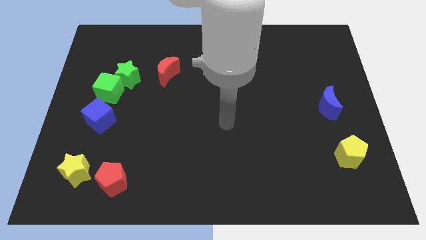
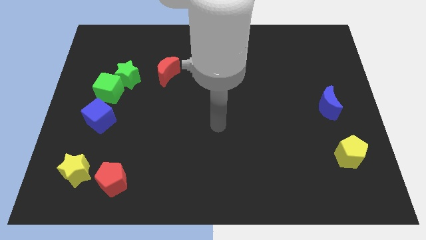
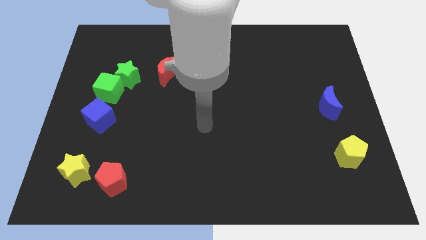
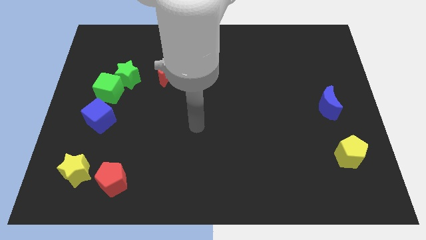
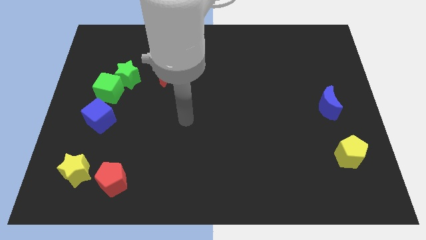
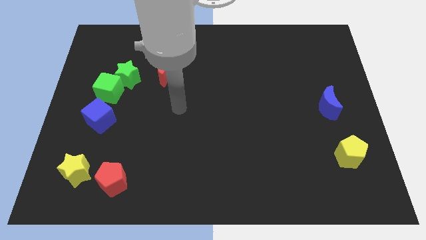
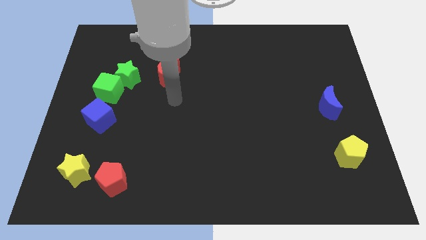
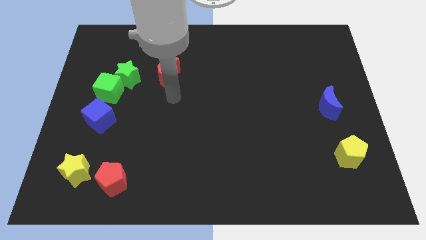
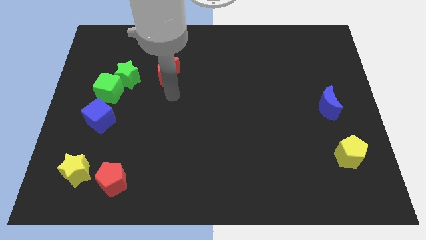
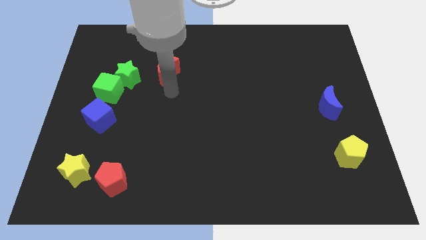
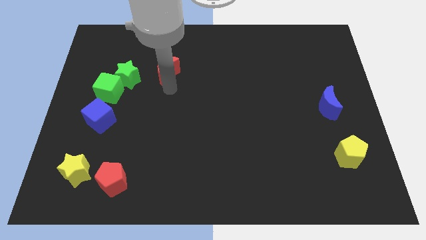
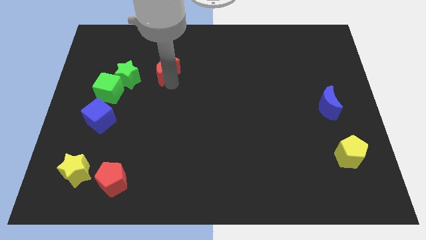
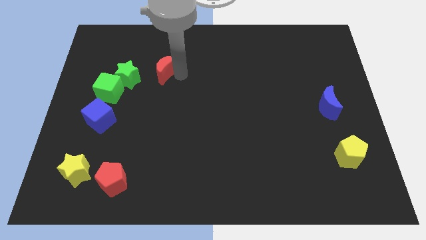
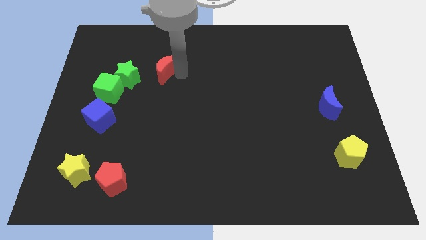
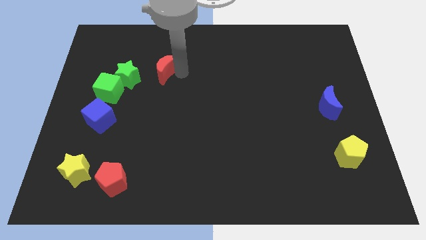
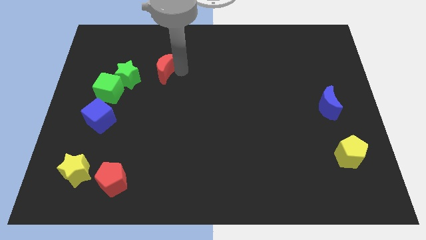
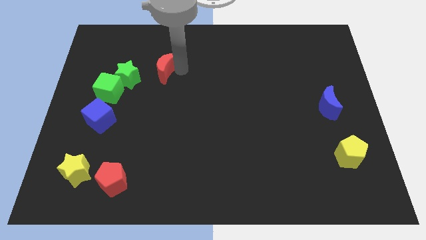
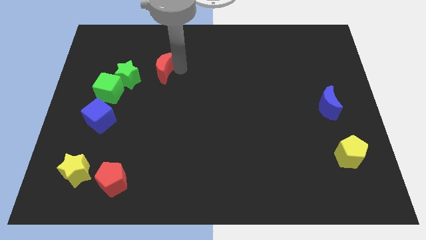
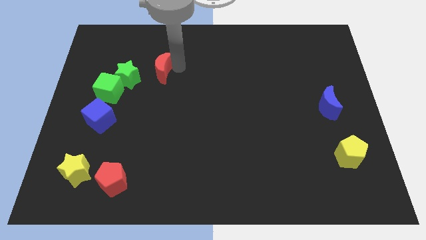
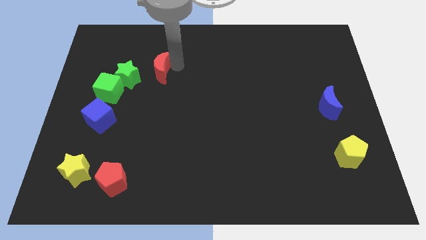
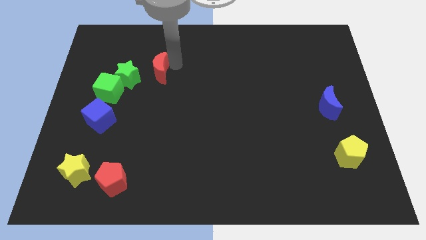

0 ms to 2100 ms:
move your arm to the top of the red moon

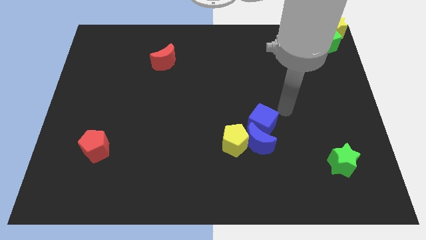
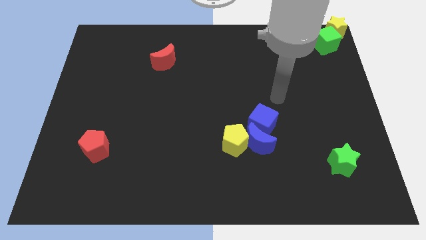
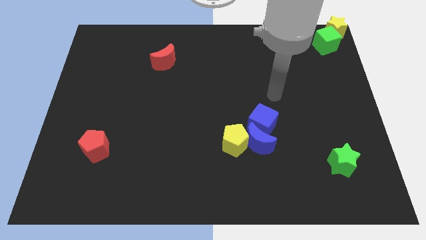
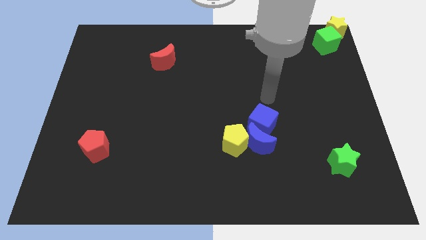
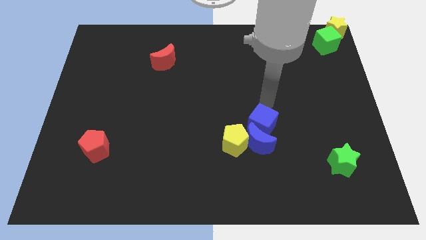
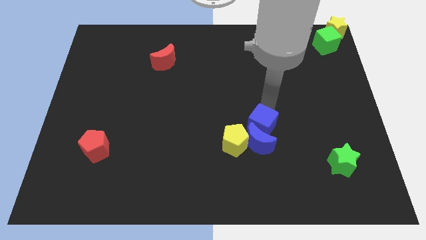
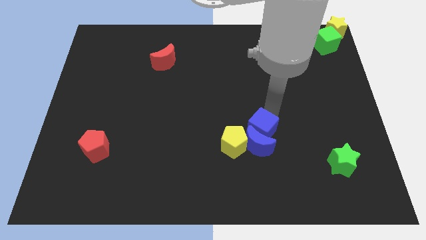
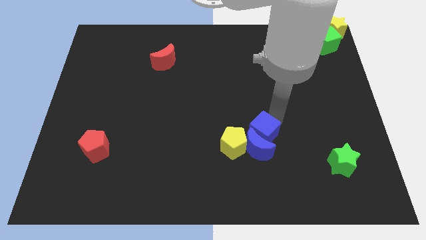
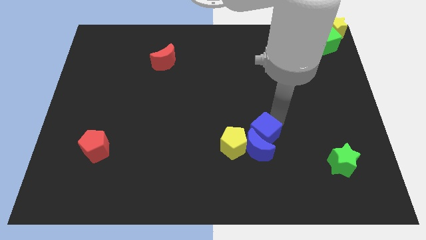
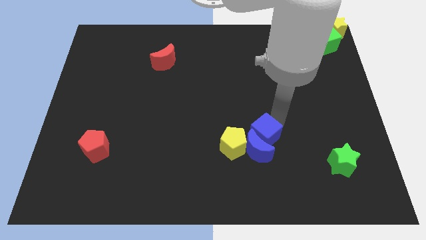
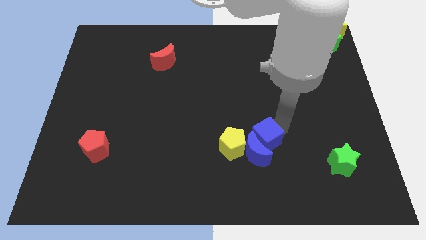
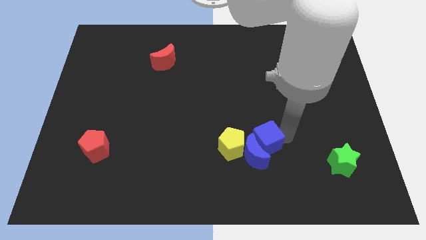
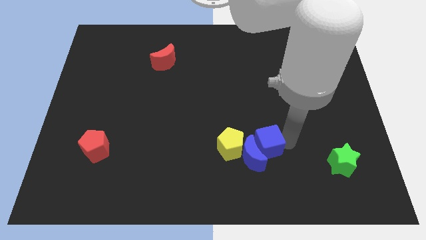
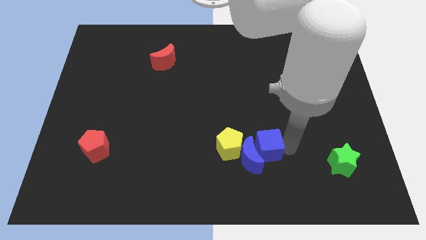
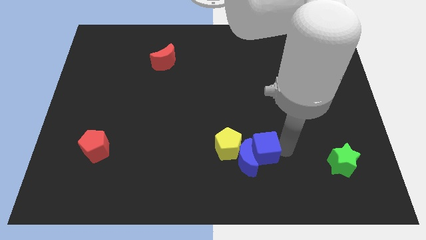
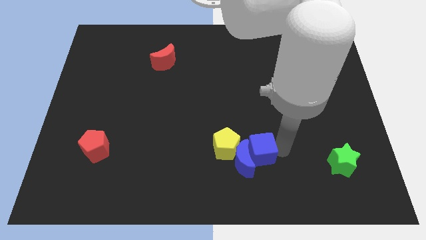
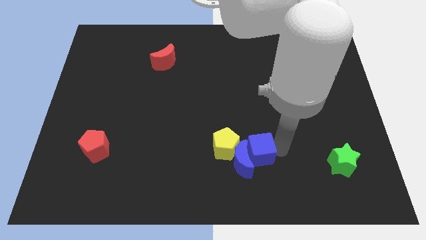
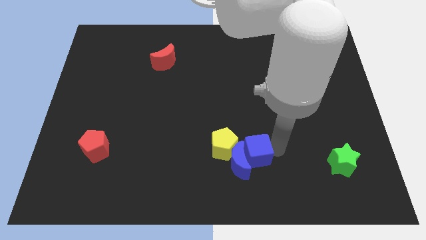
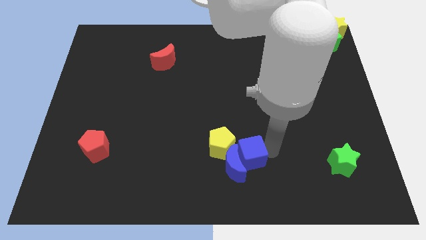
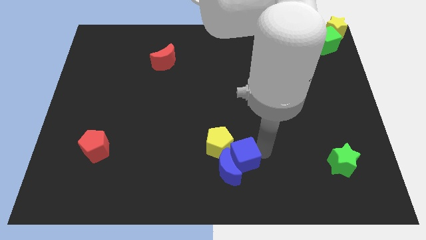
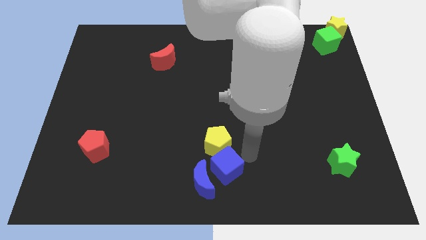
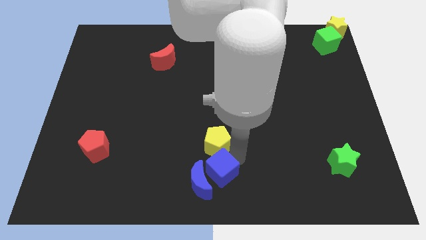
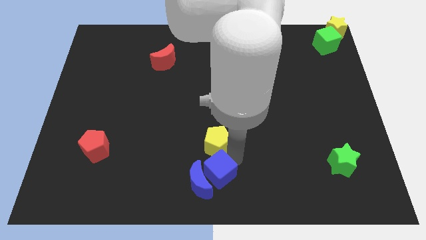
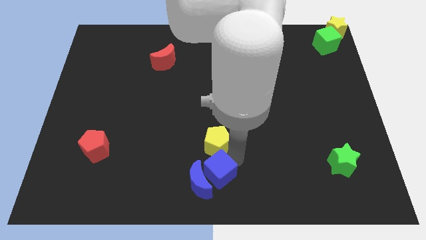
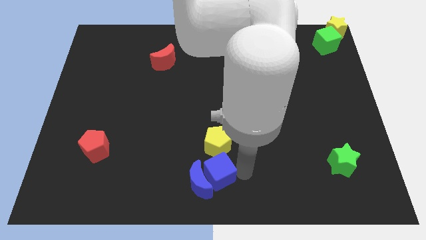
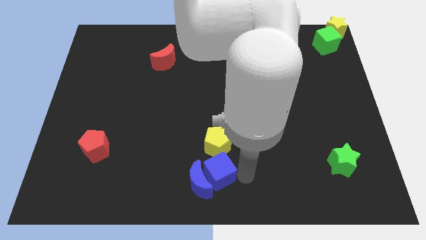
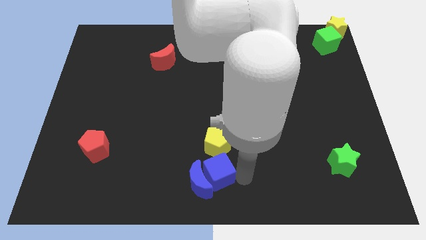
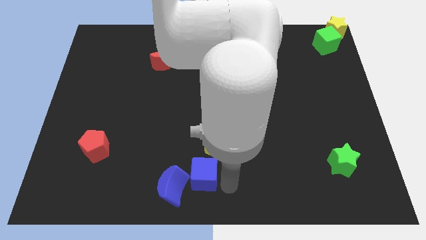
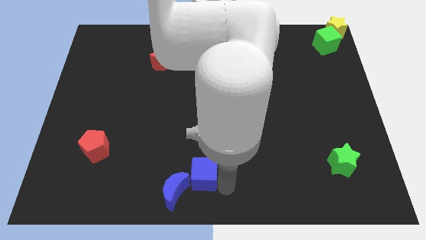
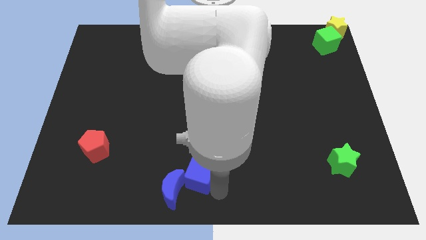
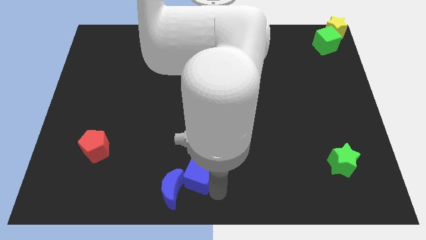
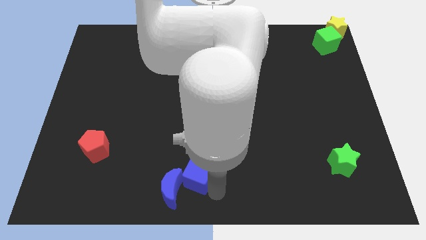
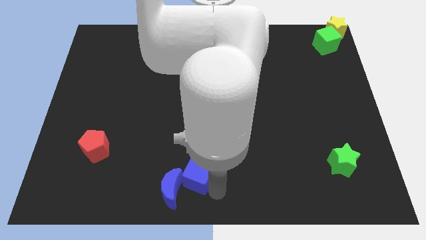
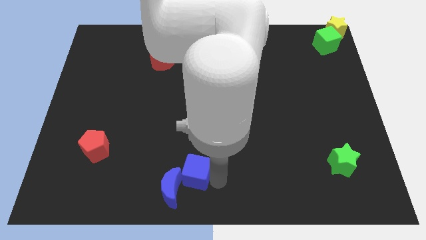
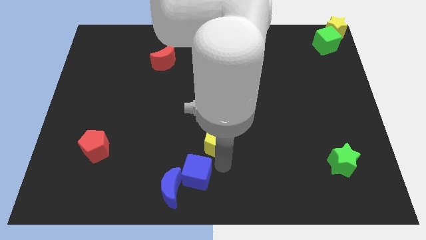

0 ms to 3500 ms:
push the blue crescent and blue cube to the bottom center of the board

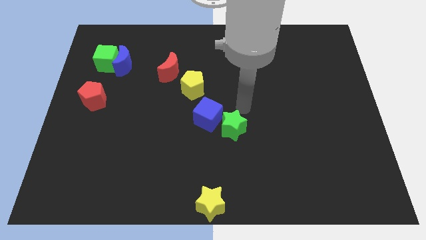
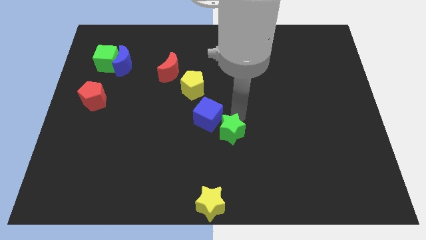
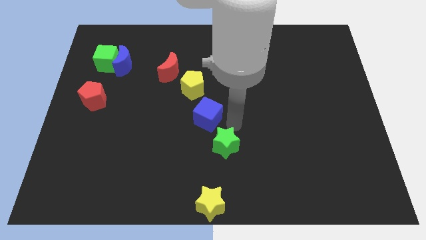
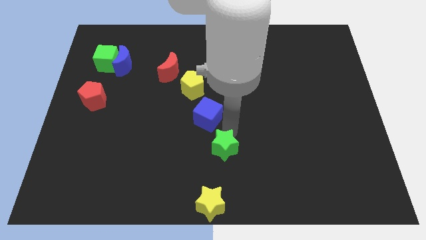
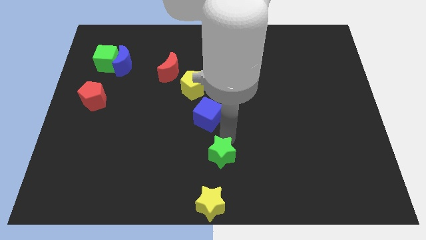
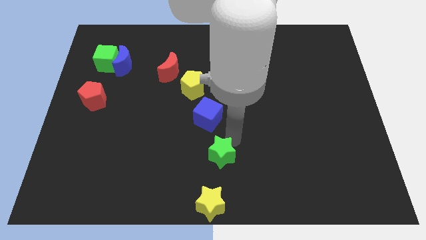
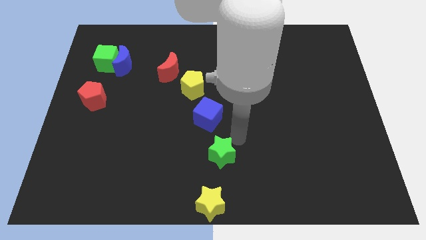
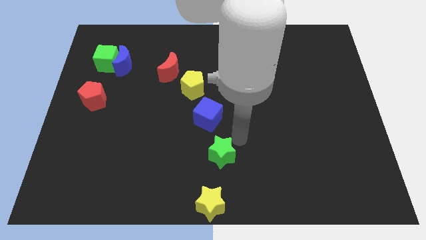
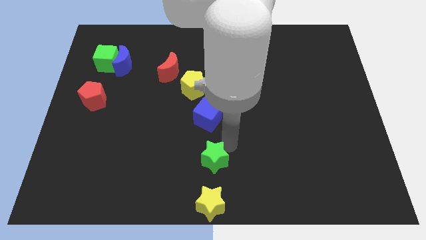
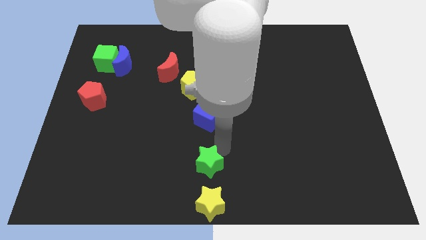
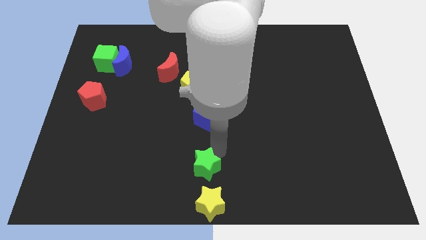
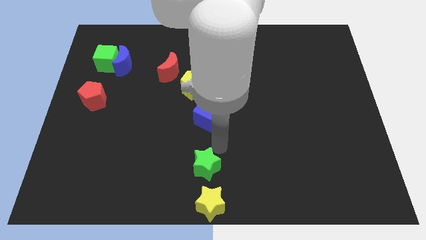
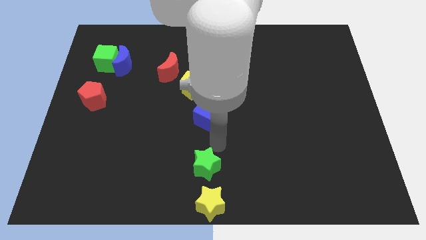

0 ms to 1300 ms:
push the green star to the top of the yellow star

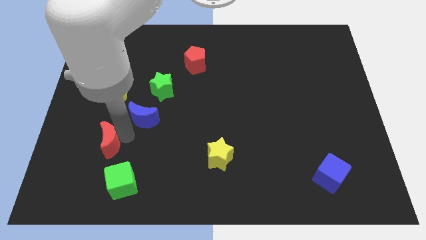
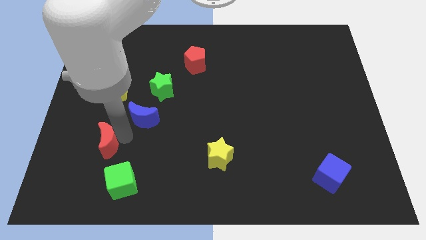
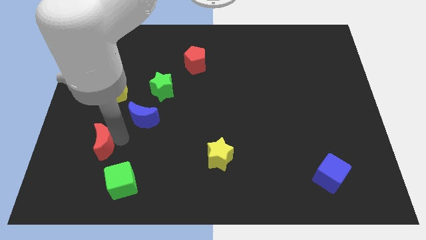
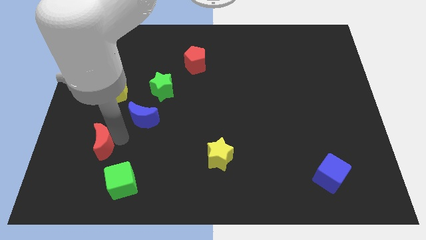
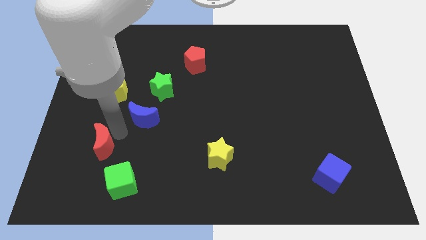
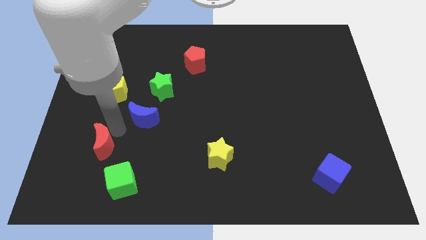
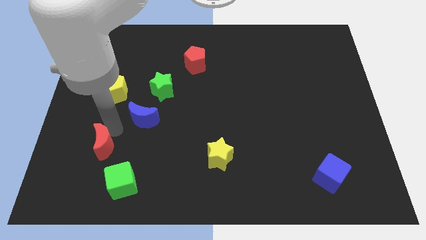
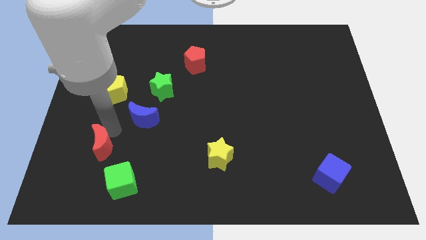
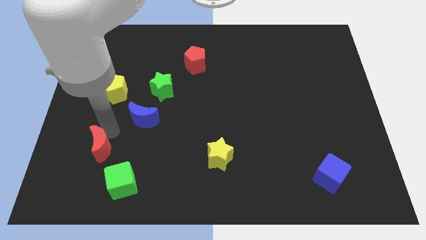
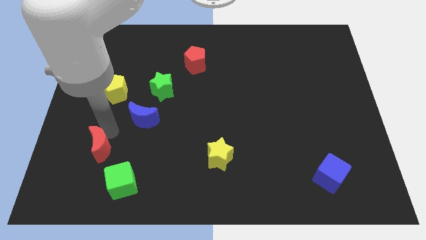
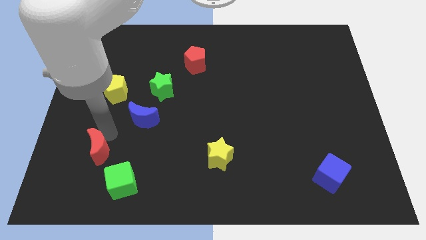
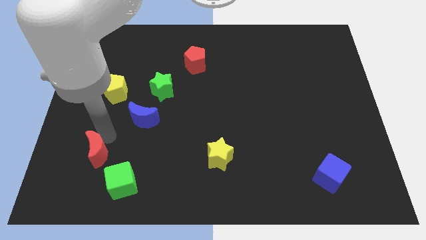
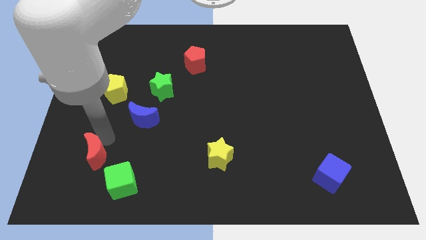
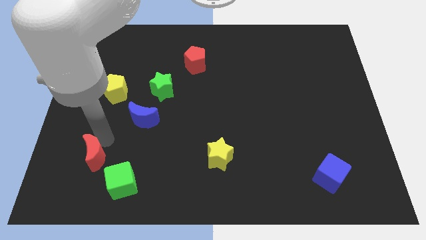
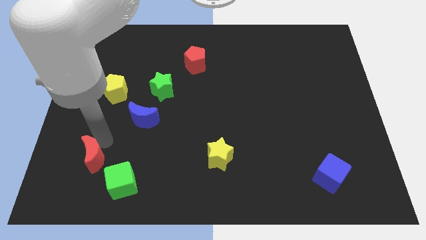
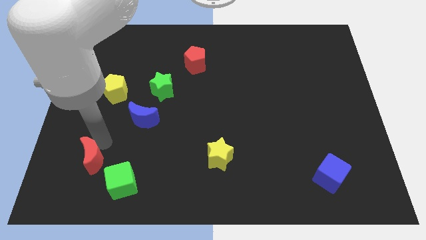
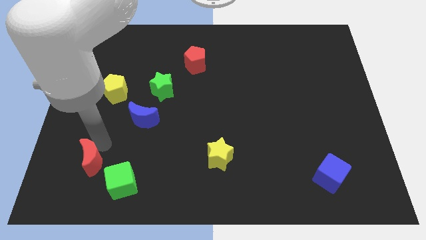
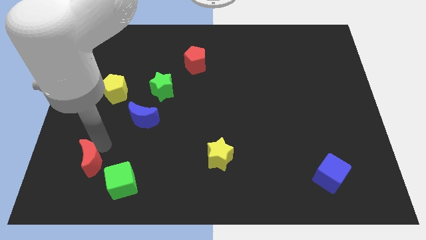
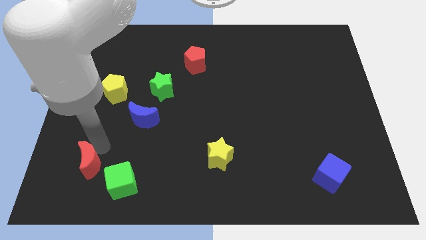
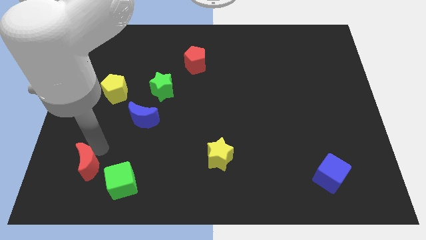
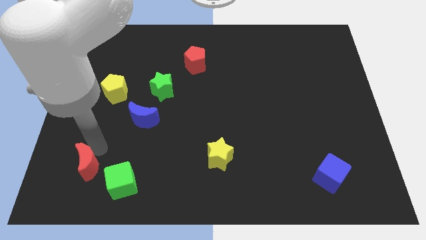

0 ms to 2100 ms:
move the red crescent diagonally top left to the green cube
